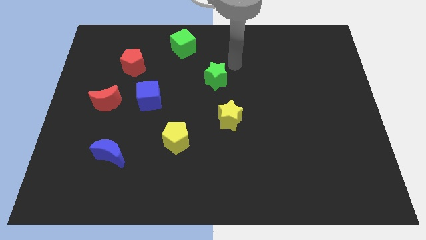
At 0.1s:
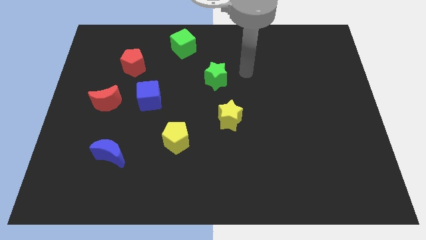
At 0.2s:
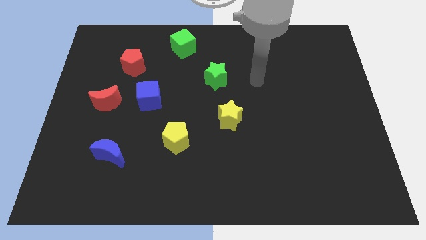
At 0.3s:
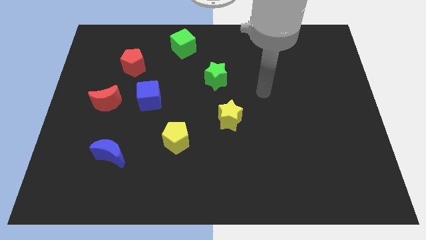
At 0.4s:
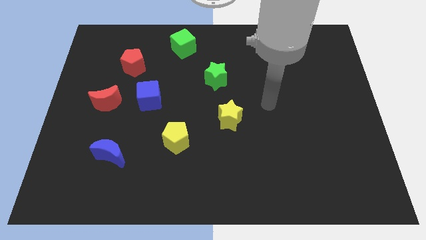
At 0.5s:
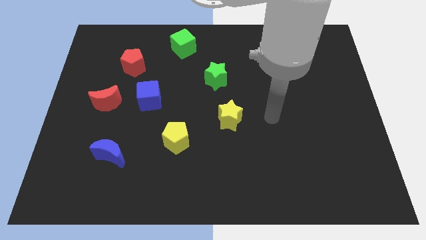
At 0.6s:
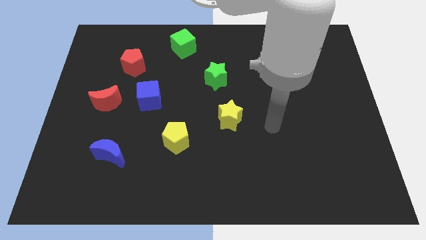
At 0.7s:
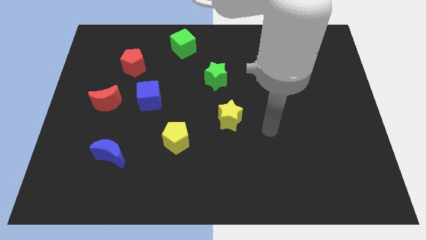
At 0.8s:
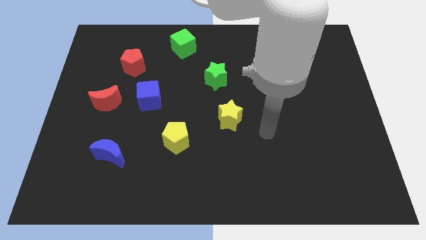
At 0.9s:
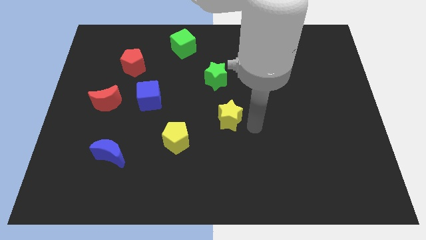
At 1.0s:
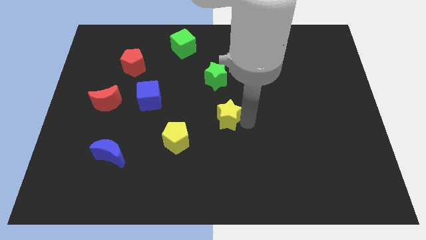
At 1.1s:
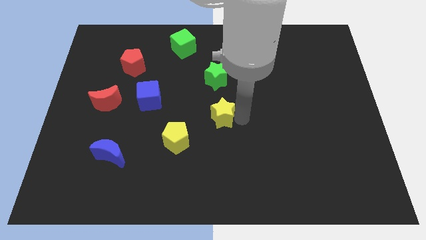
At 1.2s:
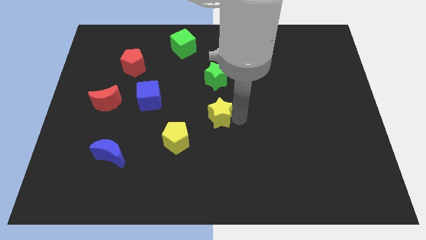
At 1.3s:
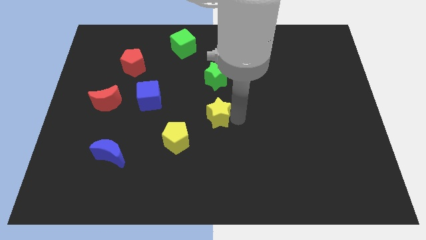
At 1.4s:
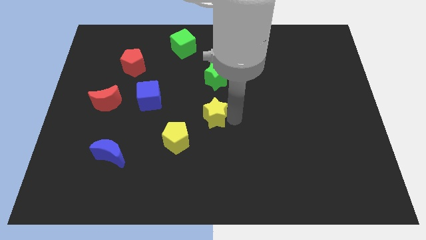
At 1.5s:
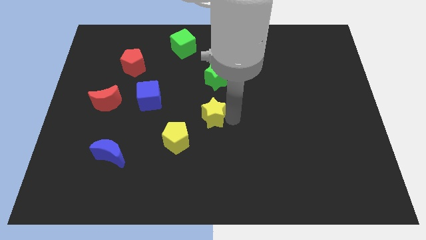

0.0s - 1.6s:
move the yellow star slightly to the left

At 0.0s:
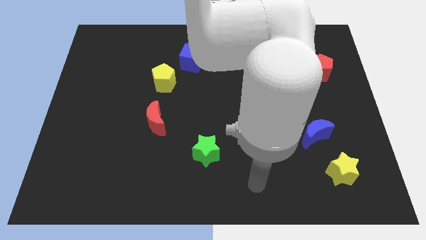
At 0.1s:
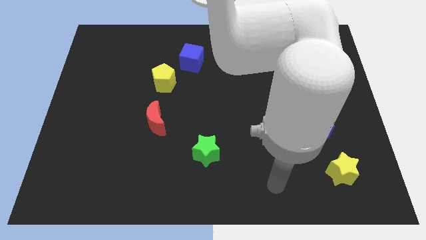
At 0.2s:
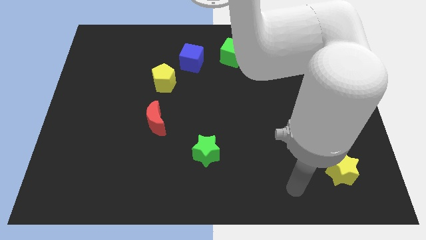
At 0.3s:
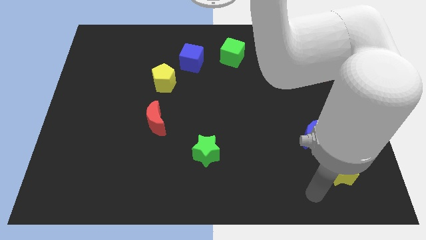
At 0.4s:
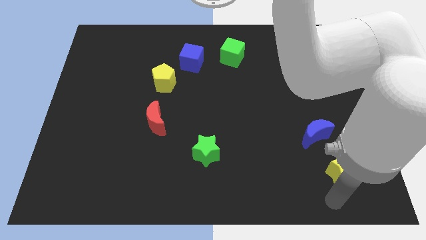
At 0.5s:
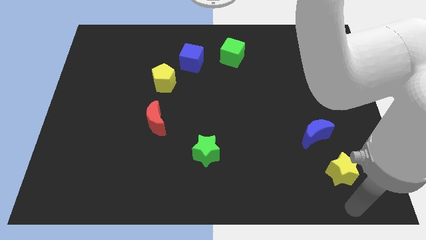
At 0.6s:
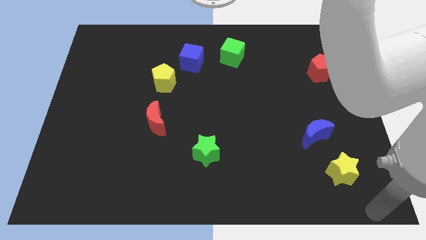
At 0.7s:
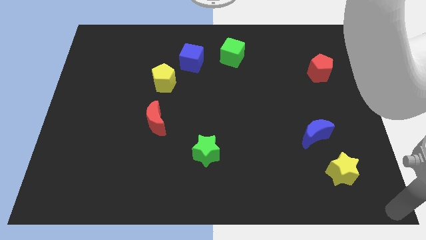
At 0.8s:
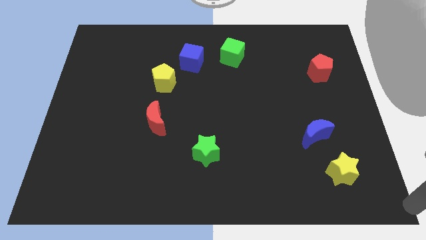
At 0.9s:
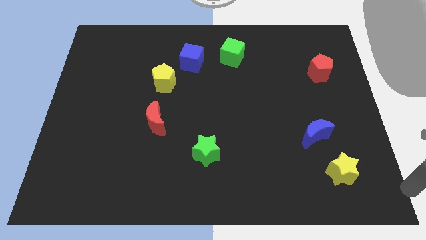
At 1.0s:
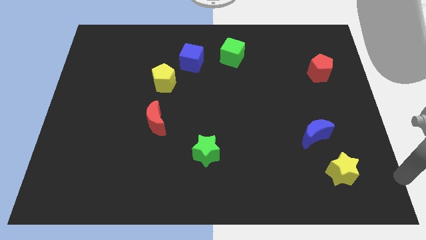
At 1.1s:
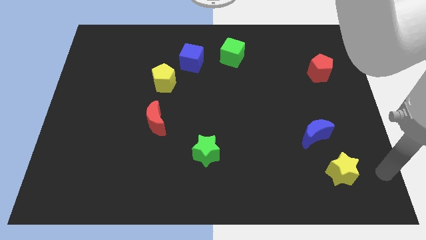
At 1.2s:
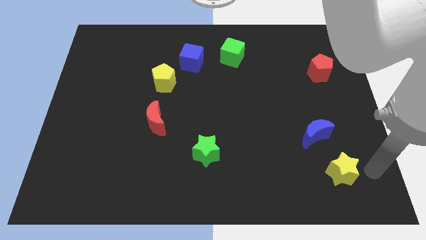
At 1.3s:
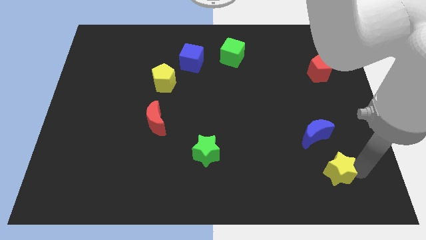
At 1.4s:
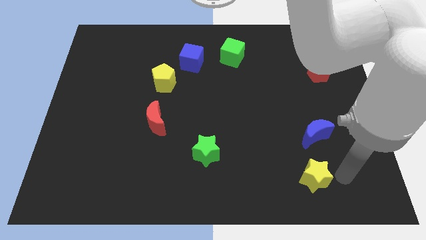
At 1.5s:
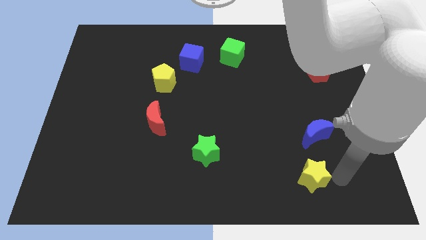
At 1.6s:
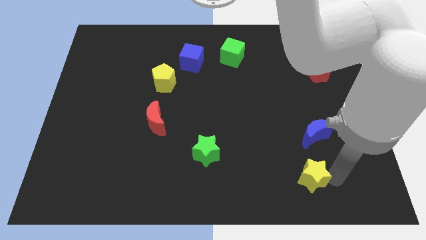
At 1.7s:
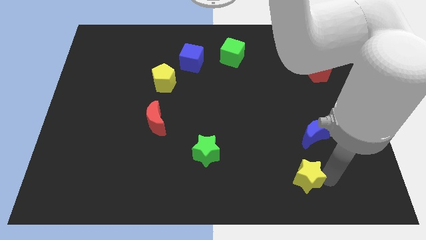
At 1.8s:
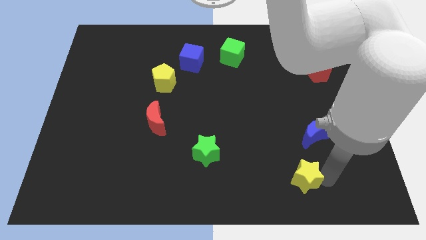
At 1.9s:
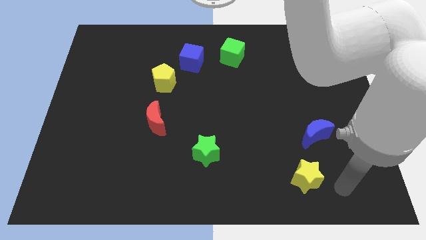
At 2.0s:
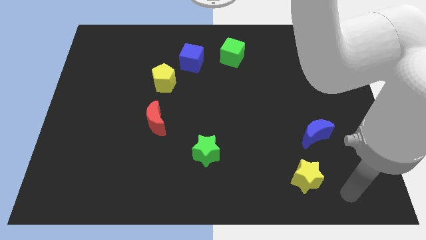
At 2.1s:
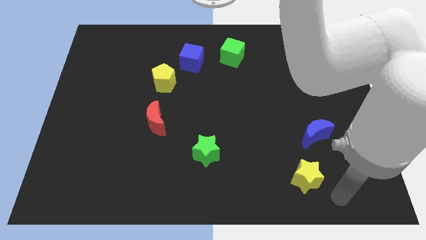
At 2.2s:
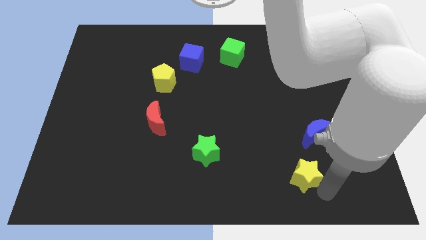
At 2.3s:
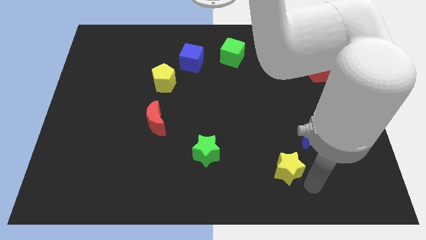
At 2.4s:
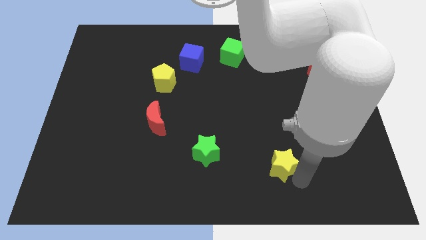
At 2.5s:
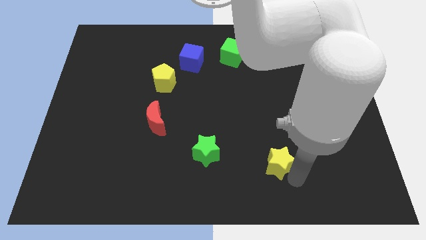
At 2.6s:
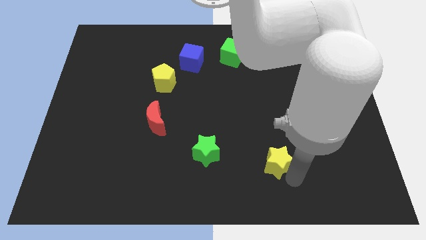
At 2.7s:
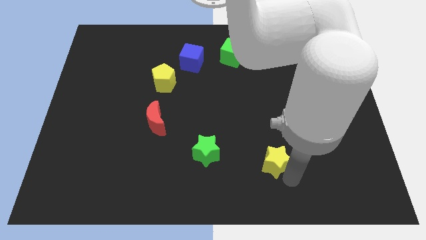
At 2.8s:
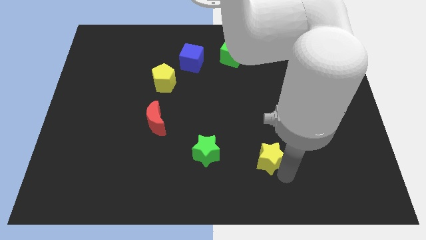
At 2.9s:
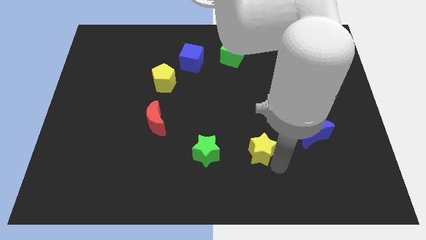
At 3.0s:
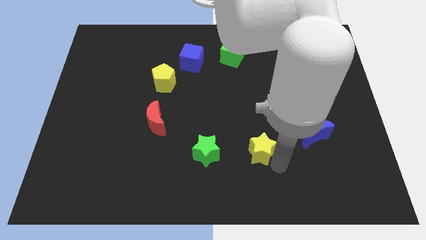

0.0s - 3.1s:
place the yellow star horizontally at the right side of the green star

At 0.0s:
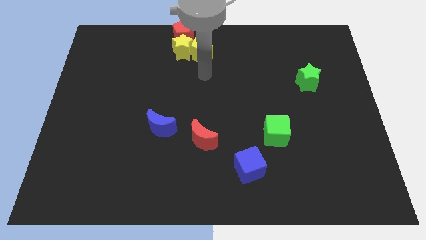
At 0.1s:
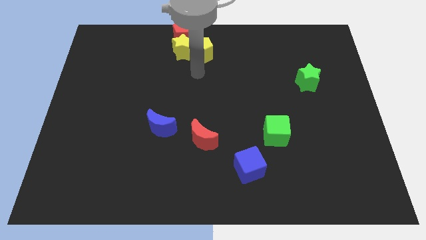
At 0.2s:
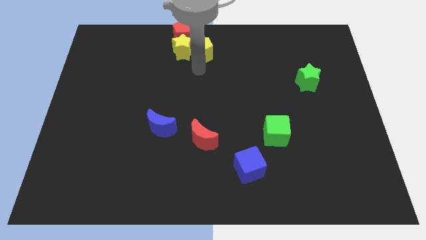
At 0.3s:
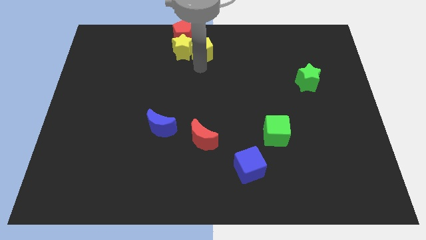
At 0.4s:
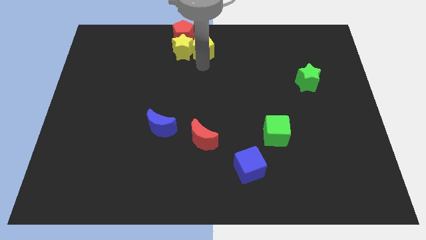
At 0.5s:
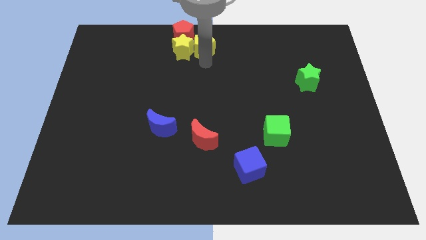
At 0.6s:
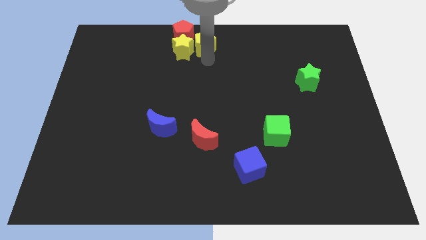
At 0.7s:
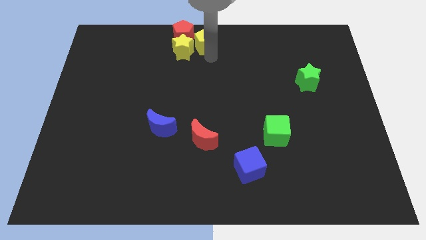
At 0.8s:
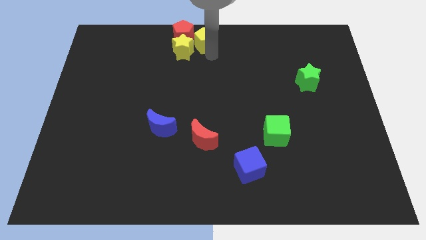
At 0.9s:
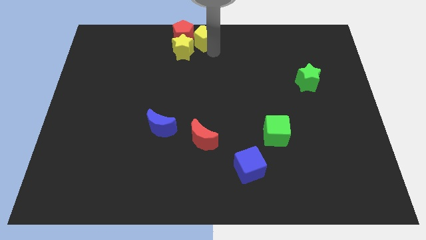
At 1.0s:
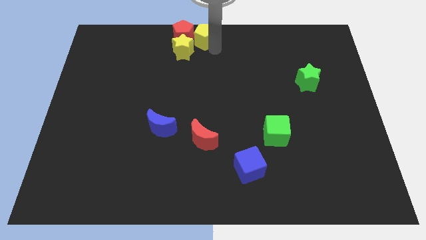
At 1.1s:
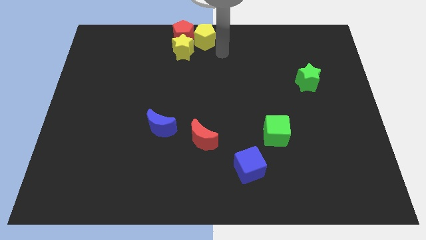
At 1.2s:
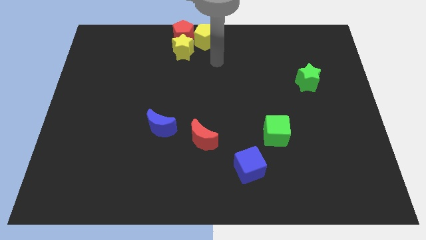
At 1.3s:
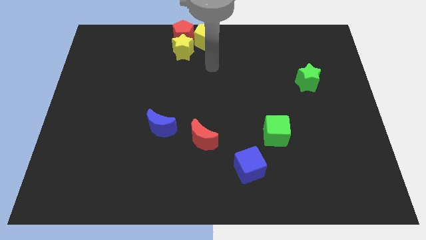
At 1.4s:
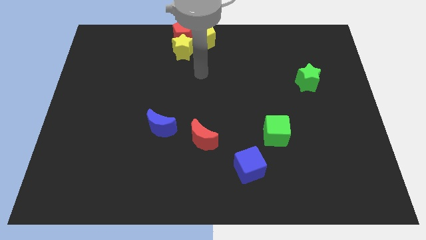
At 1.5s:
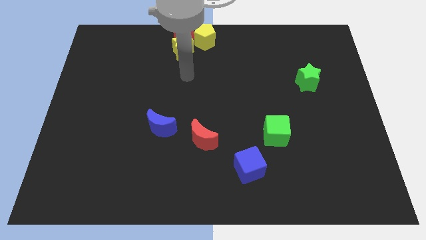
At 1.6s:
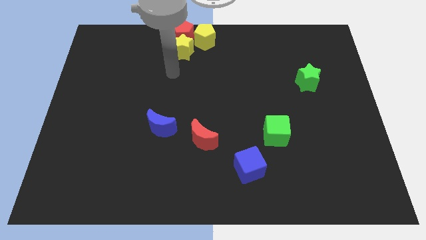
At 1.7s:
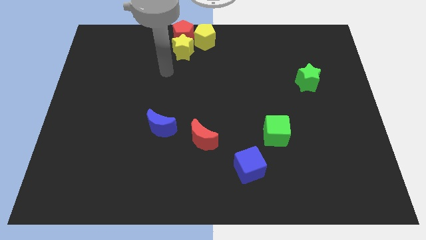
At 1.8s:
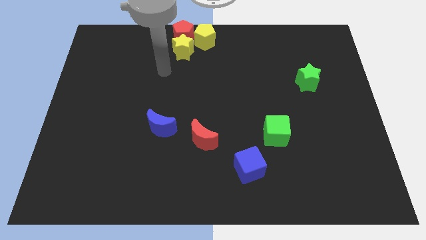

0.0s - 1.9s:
place yellow pentagon to the right side of the red pentagon

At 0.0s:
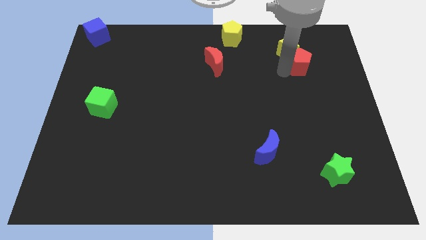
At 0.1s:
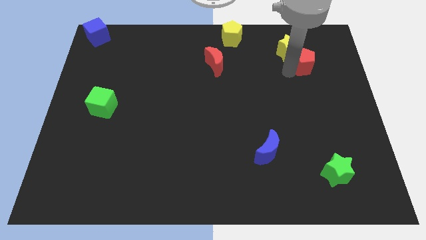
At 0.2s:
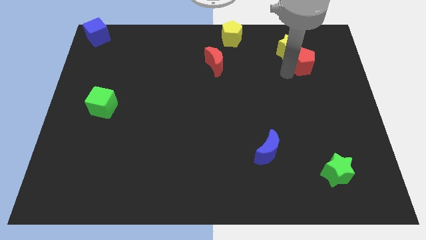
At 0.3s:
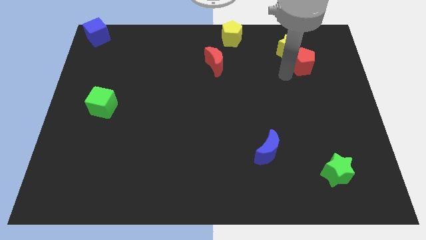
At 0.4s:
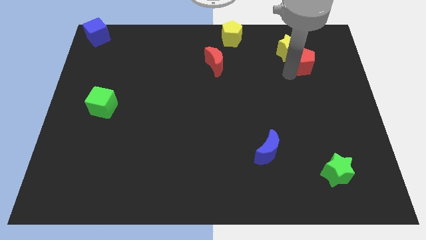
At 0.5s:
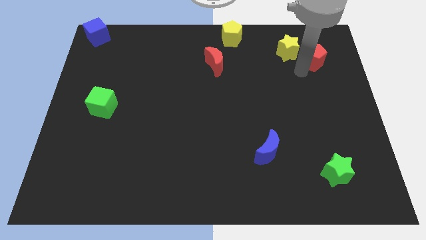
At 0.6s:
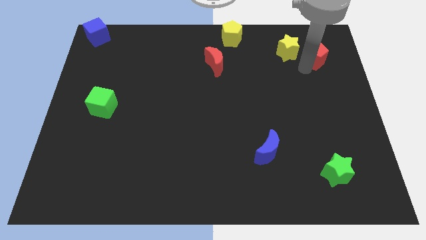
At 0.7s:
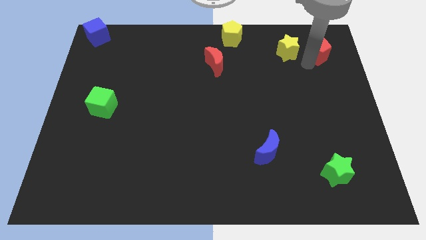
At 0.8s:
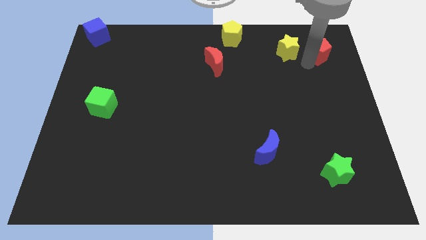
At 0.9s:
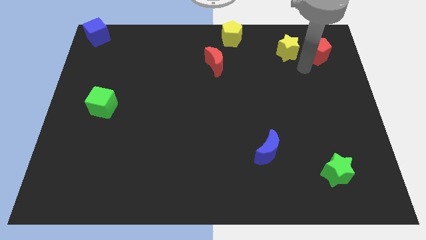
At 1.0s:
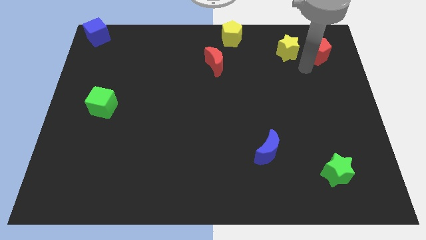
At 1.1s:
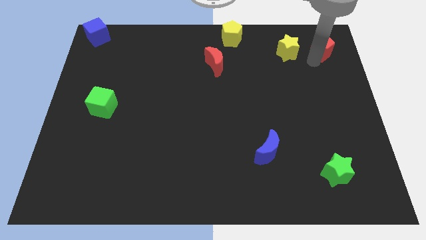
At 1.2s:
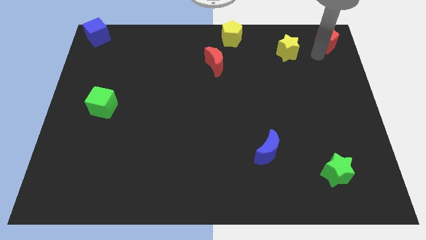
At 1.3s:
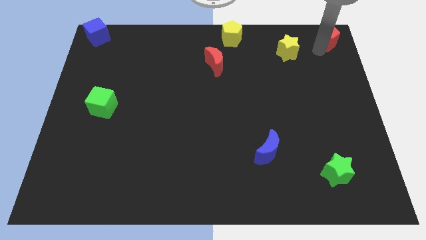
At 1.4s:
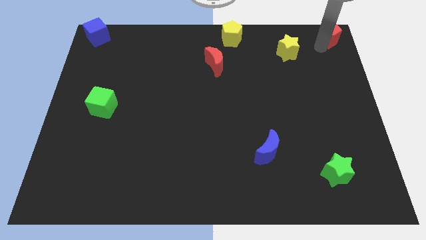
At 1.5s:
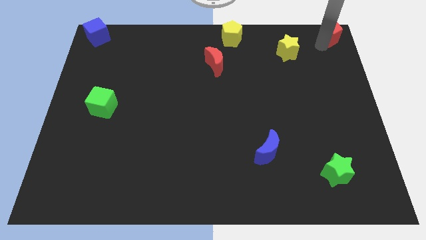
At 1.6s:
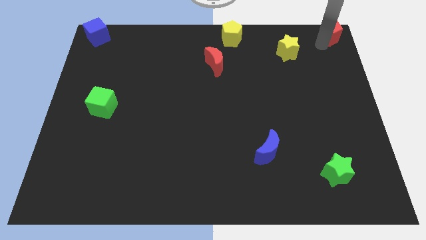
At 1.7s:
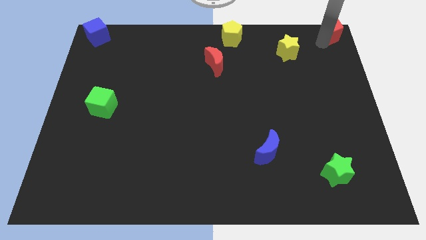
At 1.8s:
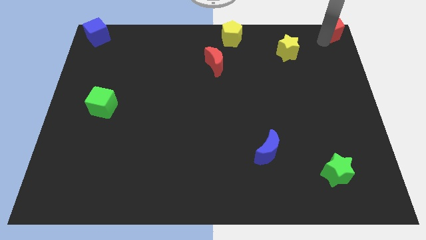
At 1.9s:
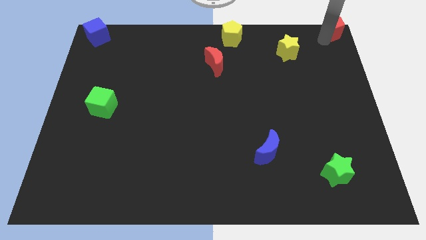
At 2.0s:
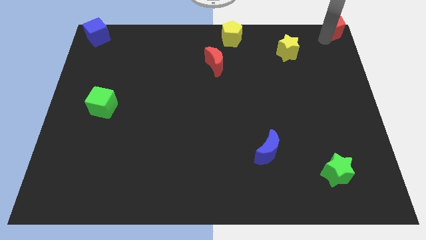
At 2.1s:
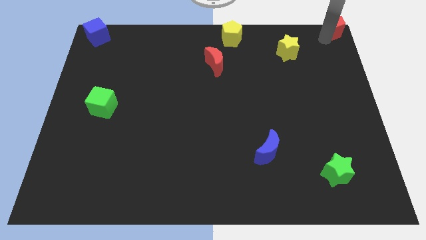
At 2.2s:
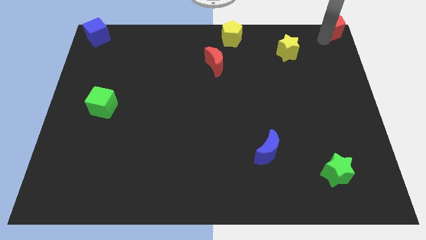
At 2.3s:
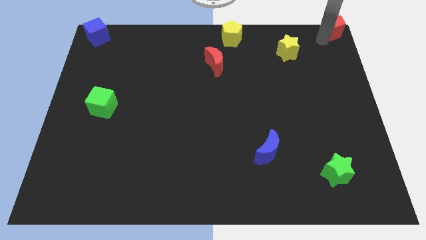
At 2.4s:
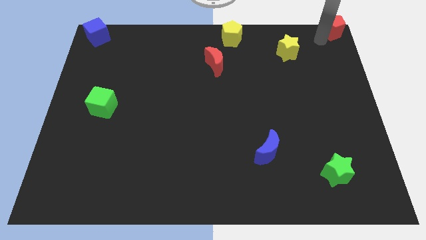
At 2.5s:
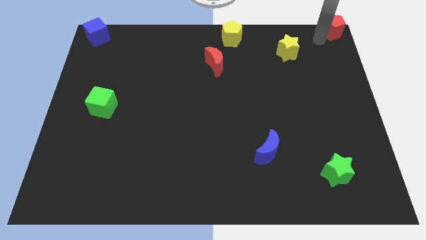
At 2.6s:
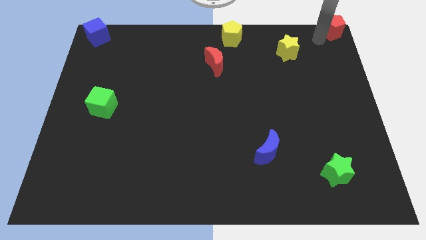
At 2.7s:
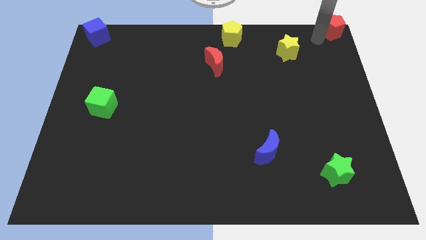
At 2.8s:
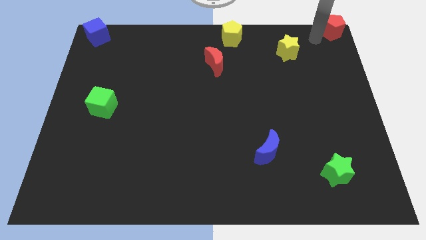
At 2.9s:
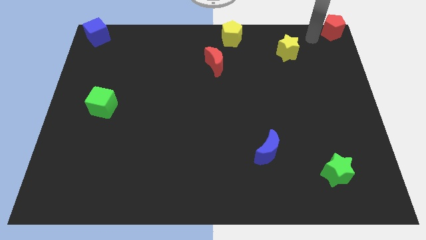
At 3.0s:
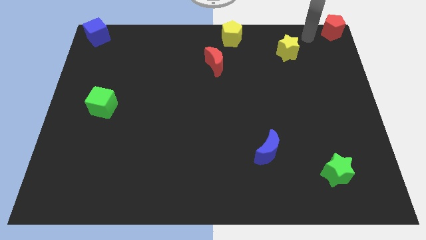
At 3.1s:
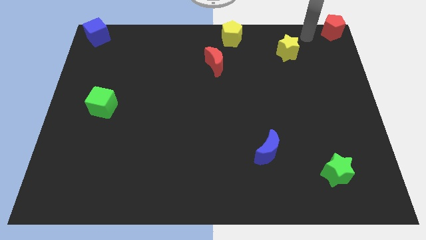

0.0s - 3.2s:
move the red pentagon at the top right corner
